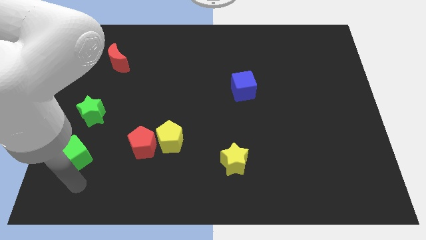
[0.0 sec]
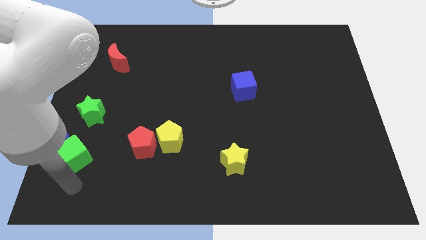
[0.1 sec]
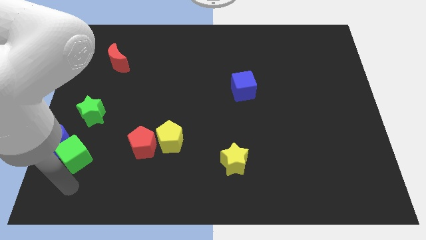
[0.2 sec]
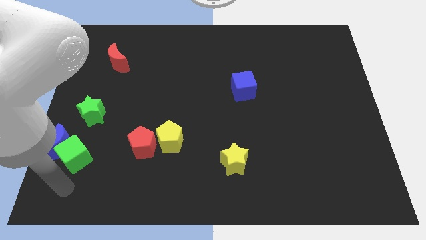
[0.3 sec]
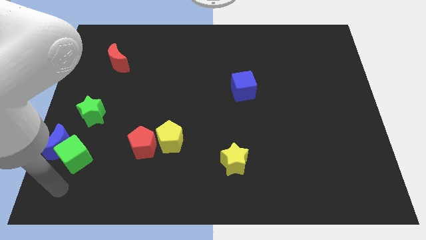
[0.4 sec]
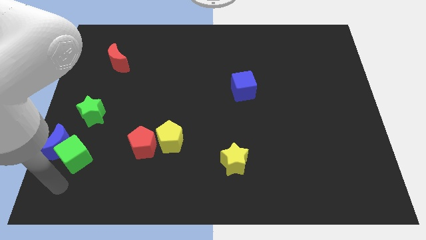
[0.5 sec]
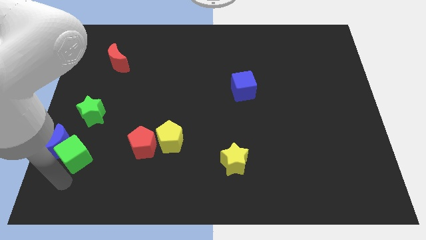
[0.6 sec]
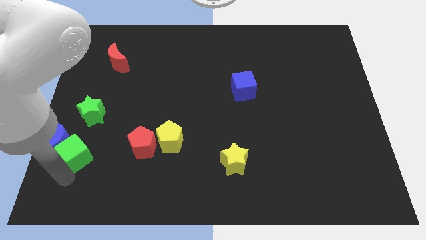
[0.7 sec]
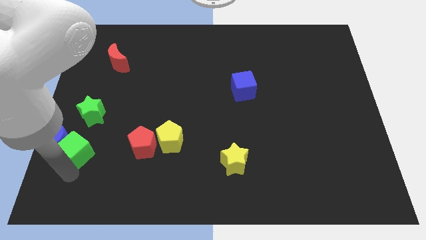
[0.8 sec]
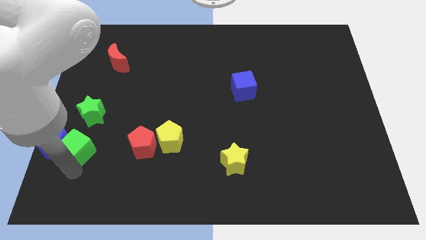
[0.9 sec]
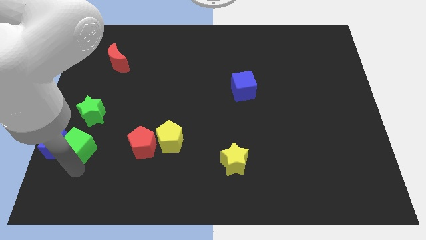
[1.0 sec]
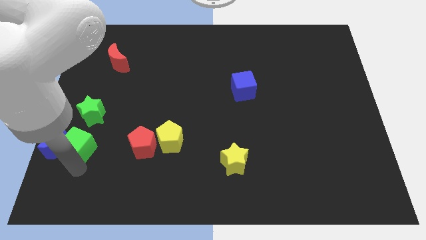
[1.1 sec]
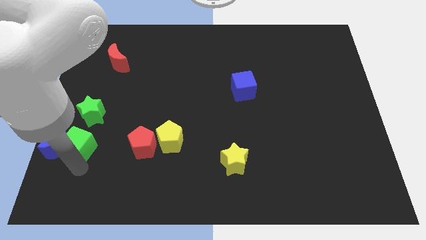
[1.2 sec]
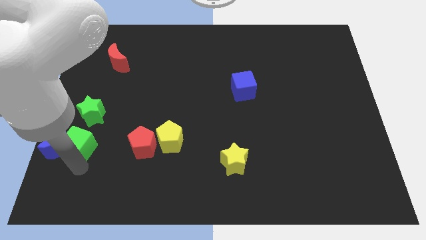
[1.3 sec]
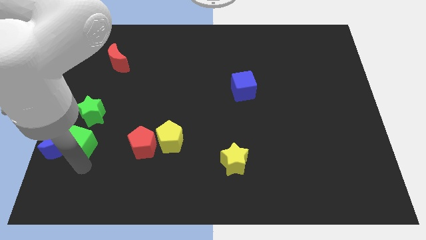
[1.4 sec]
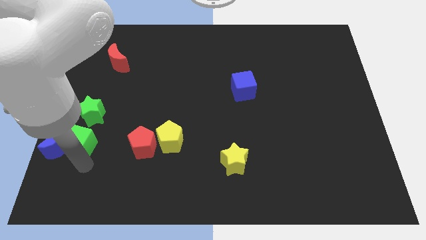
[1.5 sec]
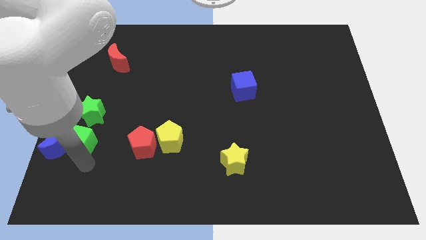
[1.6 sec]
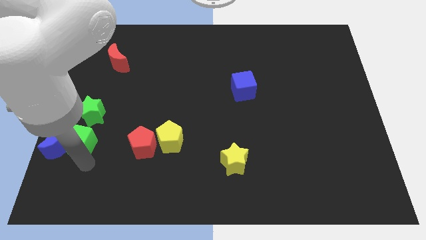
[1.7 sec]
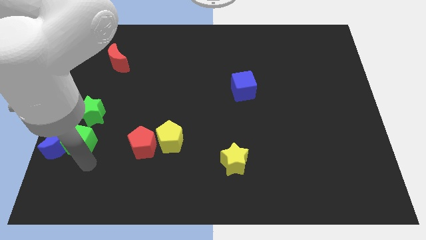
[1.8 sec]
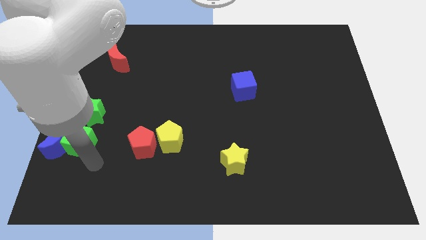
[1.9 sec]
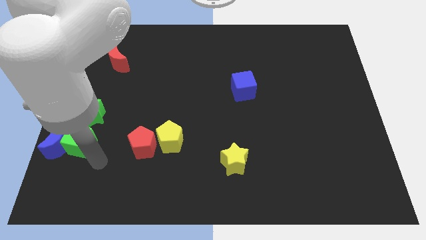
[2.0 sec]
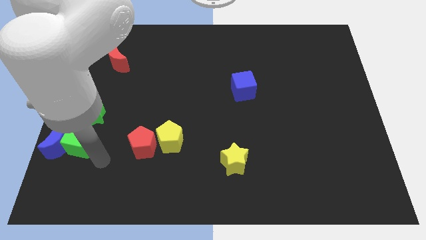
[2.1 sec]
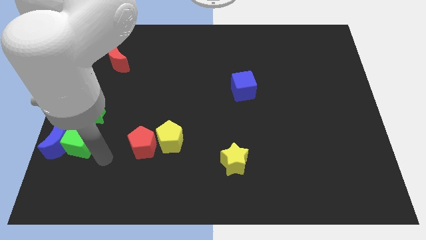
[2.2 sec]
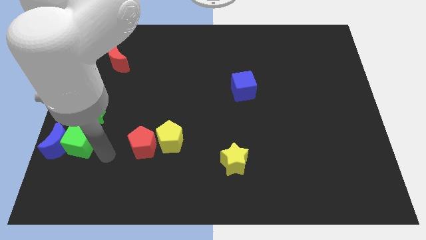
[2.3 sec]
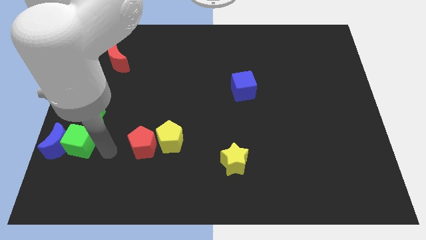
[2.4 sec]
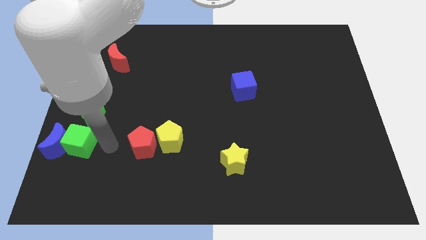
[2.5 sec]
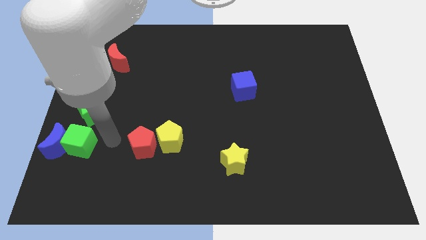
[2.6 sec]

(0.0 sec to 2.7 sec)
place the green cube right to the blue crescent

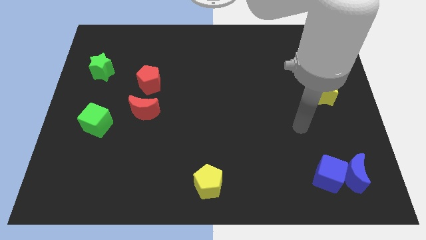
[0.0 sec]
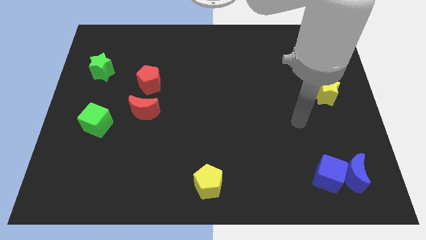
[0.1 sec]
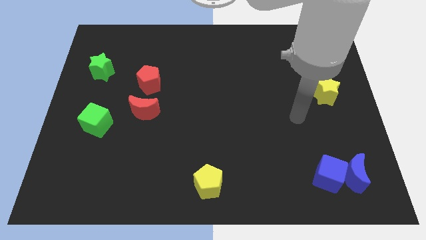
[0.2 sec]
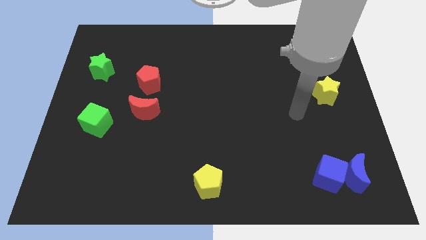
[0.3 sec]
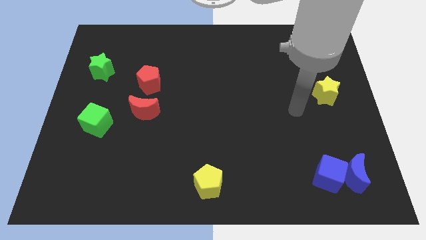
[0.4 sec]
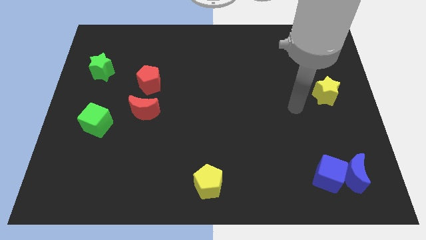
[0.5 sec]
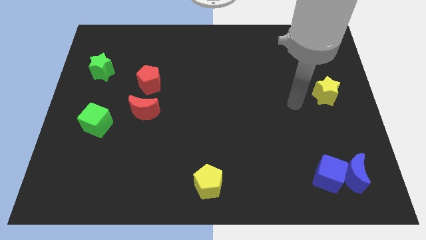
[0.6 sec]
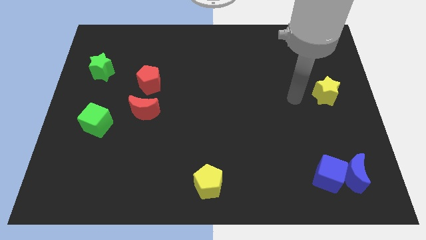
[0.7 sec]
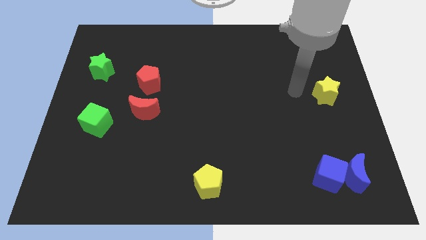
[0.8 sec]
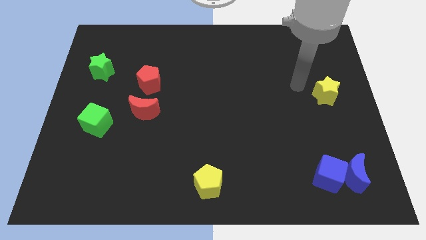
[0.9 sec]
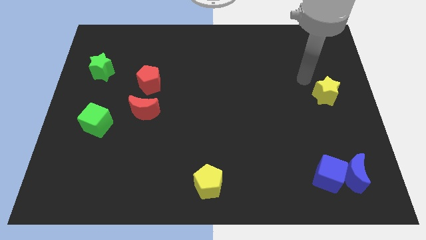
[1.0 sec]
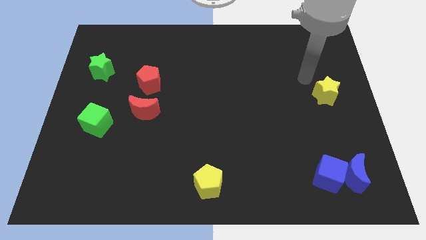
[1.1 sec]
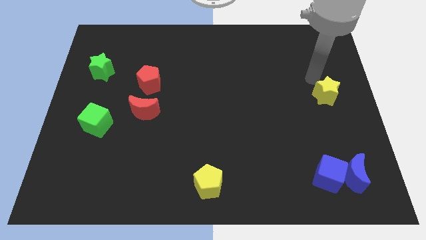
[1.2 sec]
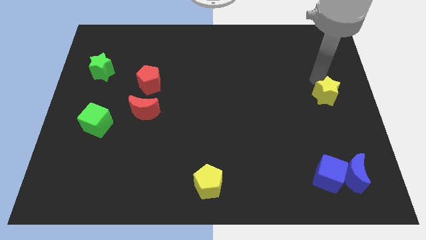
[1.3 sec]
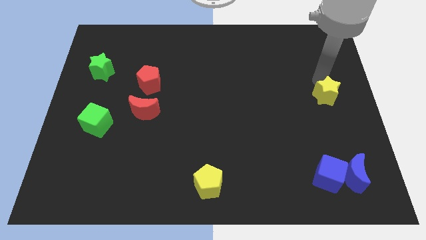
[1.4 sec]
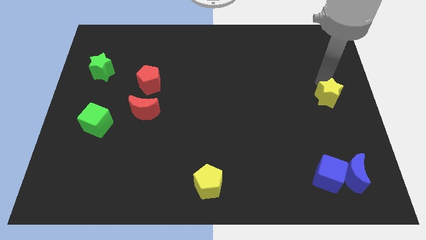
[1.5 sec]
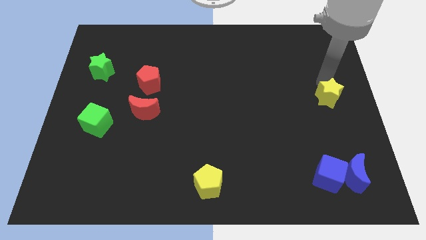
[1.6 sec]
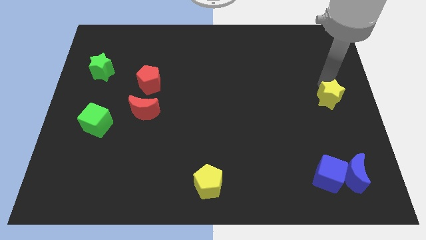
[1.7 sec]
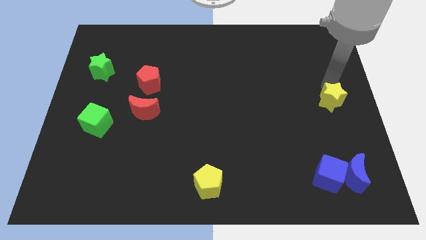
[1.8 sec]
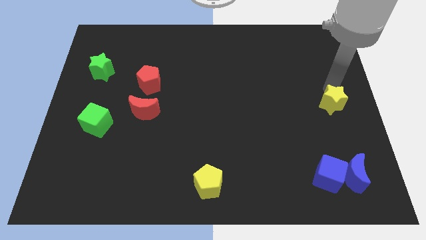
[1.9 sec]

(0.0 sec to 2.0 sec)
touch the top of the yellow star

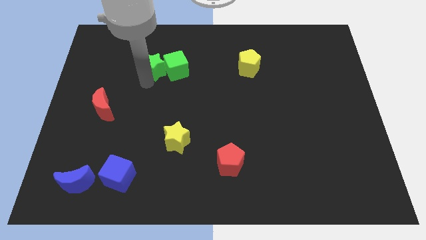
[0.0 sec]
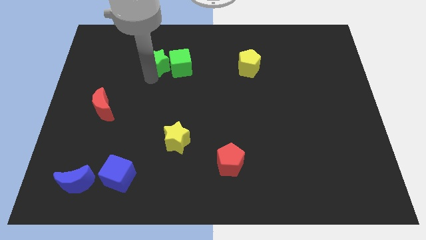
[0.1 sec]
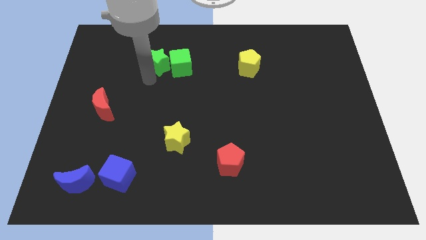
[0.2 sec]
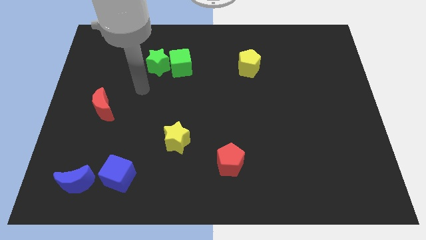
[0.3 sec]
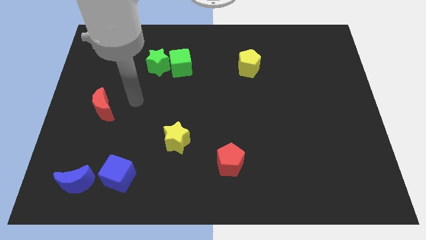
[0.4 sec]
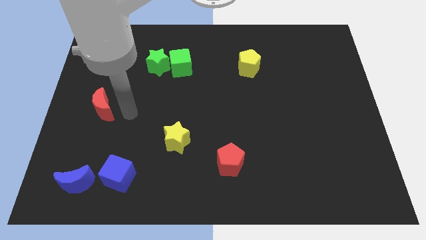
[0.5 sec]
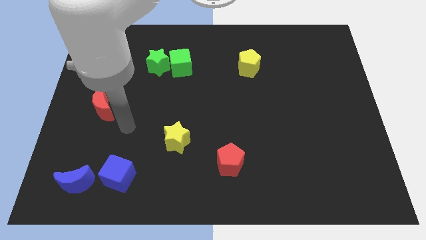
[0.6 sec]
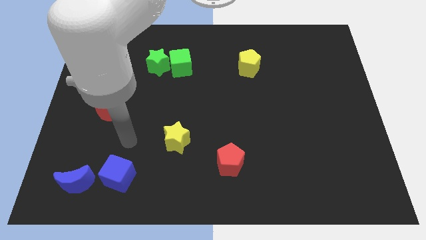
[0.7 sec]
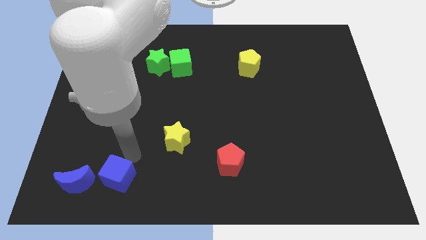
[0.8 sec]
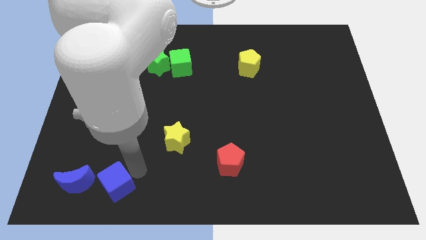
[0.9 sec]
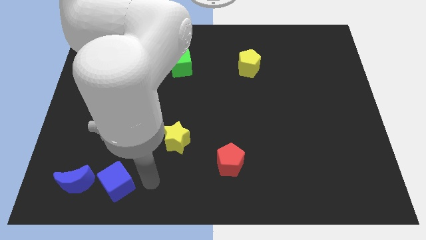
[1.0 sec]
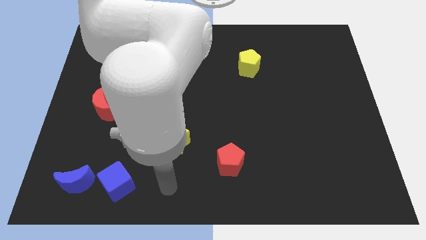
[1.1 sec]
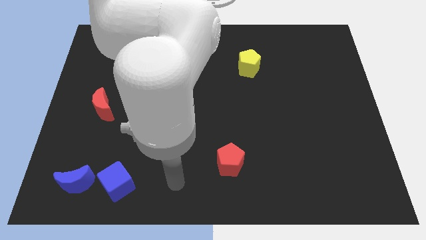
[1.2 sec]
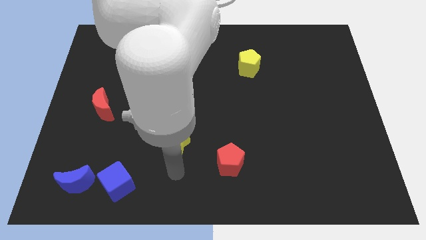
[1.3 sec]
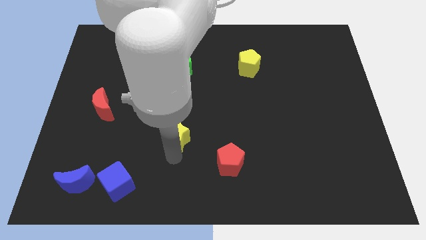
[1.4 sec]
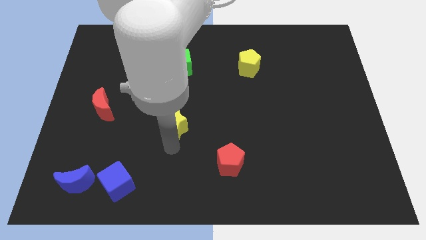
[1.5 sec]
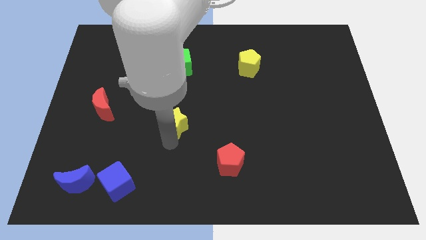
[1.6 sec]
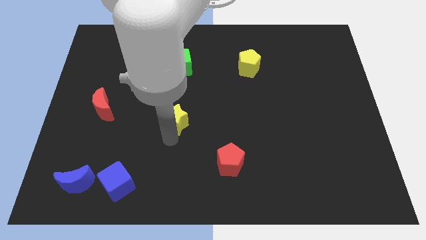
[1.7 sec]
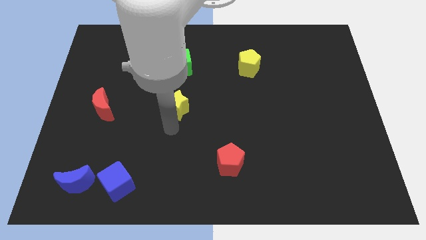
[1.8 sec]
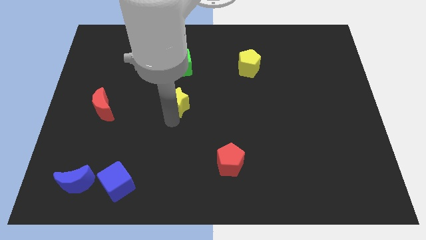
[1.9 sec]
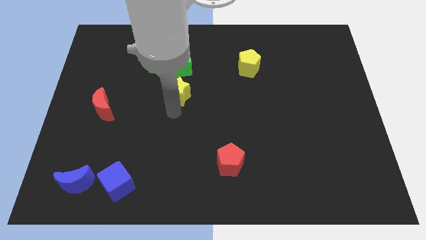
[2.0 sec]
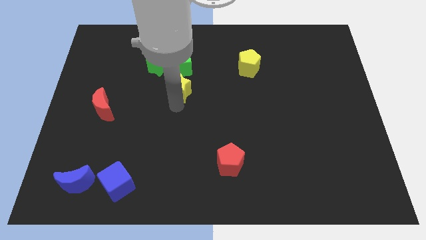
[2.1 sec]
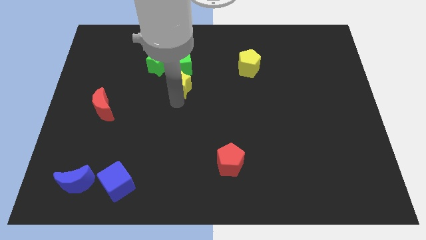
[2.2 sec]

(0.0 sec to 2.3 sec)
move yellow star into green cube

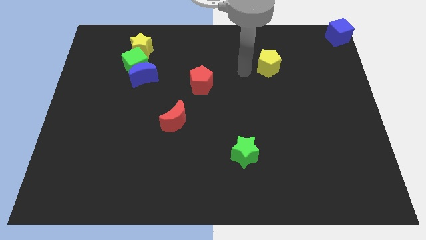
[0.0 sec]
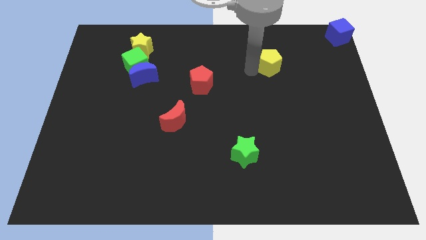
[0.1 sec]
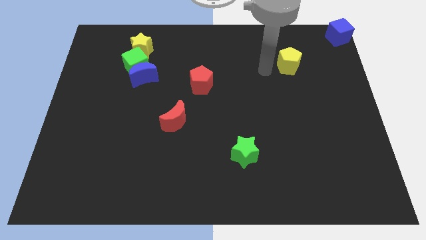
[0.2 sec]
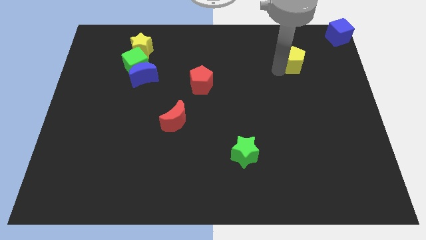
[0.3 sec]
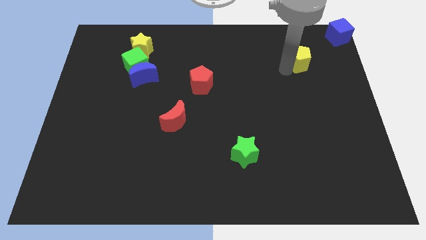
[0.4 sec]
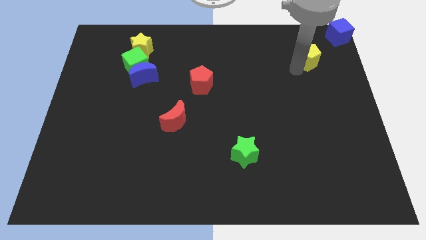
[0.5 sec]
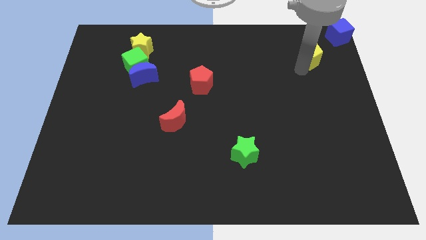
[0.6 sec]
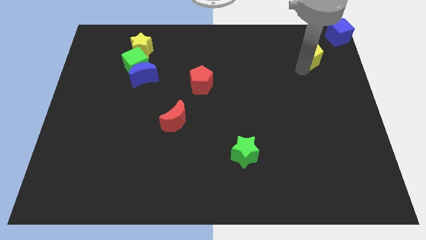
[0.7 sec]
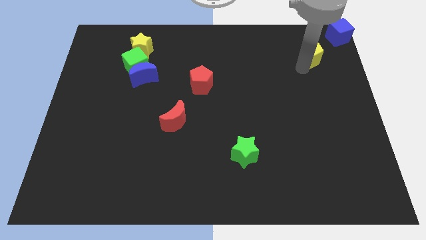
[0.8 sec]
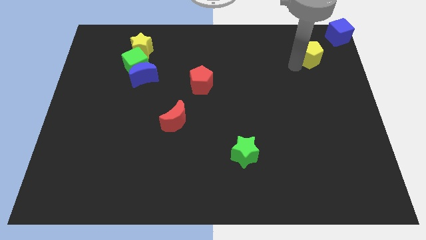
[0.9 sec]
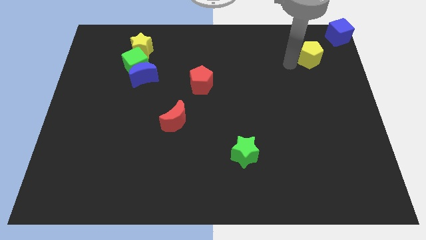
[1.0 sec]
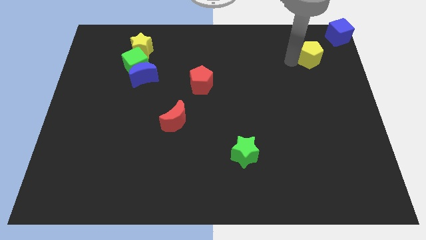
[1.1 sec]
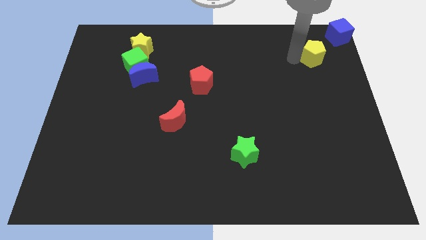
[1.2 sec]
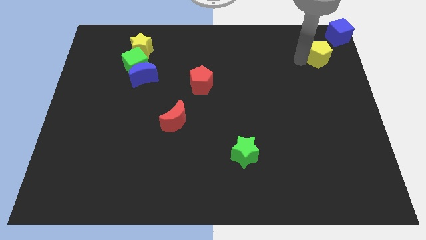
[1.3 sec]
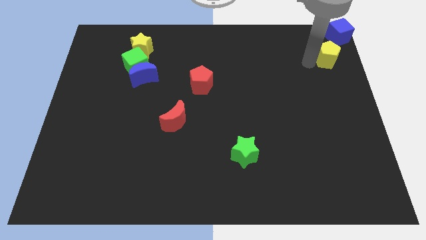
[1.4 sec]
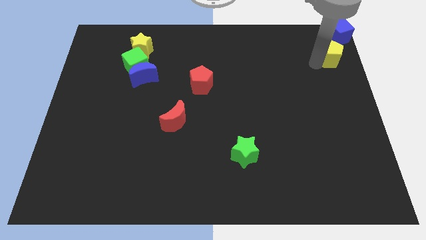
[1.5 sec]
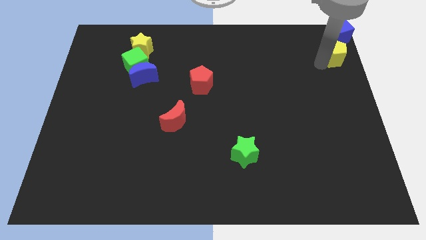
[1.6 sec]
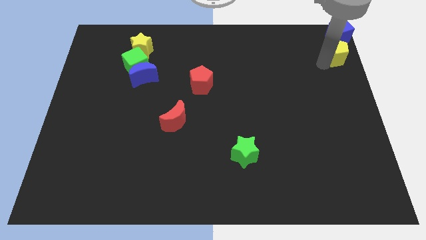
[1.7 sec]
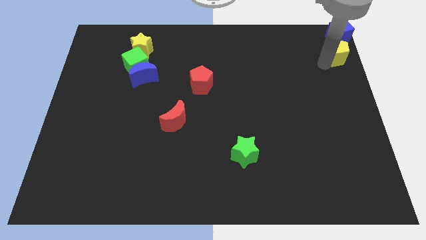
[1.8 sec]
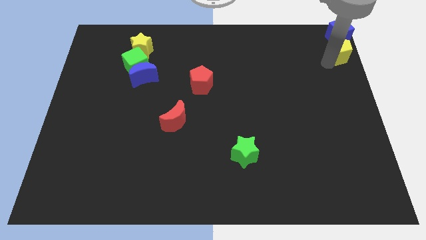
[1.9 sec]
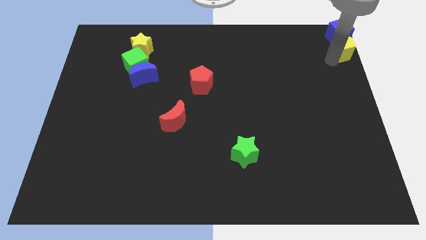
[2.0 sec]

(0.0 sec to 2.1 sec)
place the yellow pentagon at the bottom of the blue cube
